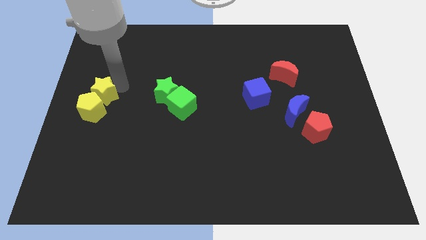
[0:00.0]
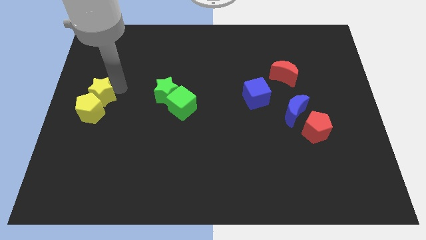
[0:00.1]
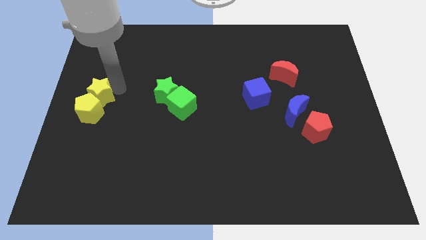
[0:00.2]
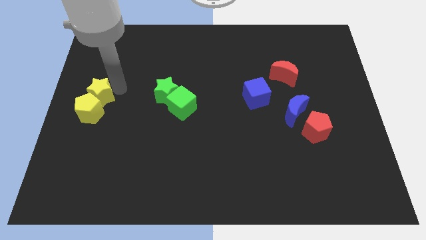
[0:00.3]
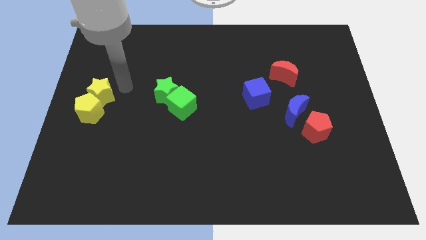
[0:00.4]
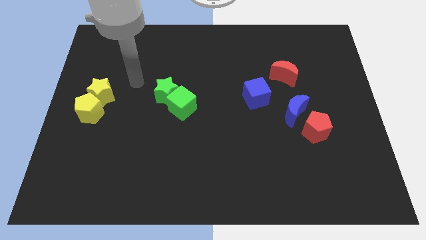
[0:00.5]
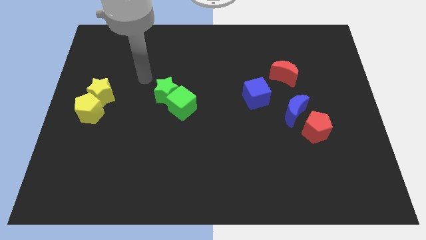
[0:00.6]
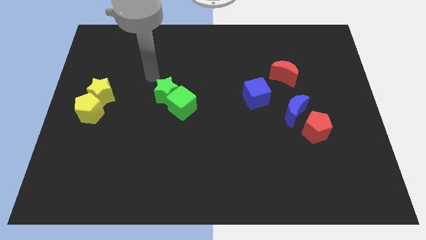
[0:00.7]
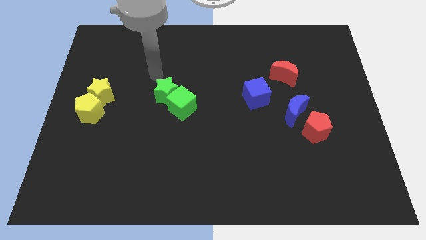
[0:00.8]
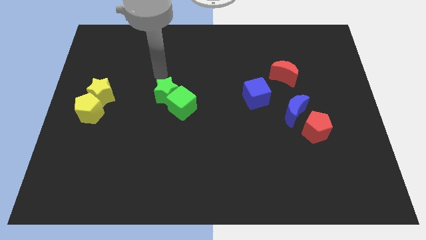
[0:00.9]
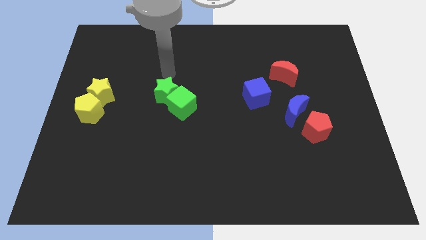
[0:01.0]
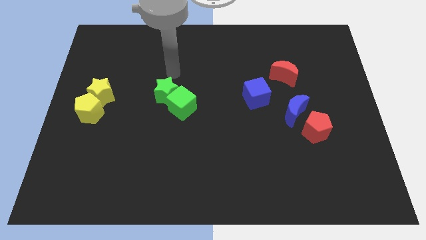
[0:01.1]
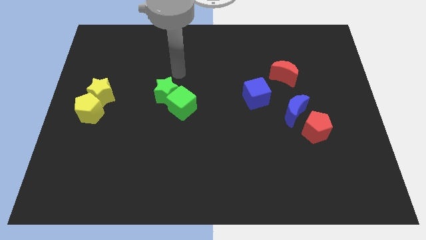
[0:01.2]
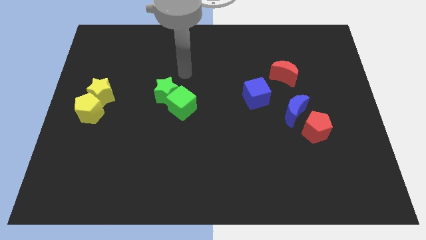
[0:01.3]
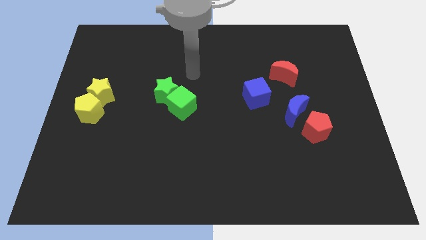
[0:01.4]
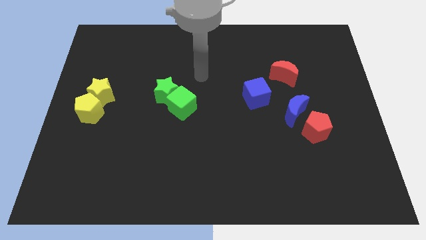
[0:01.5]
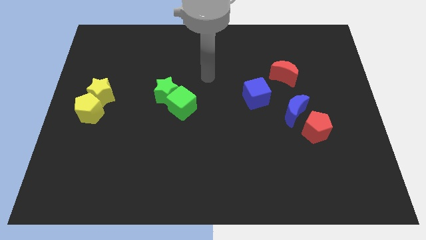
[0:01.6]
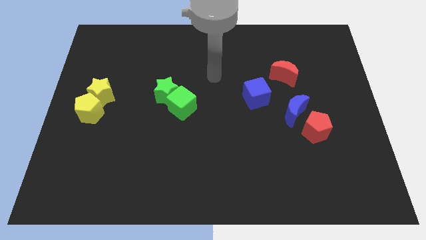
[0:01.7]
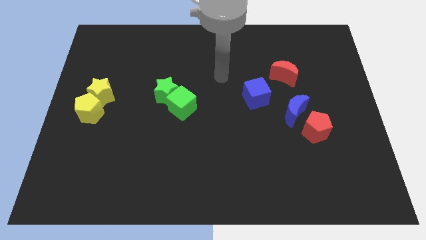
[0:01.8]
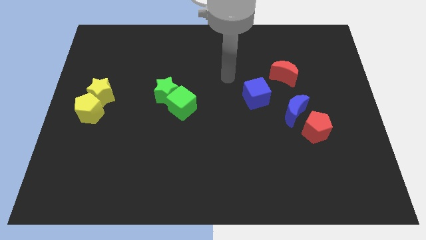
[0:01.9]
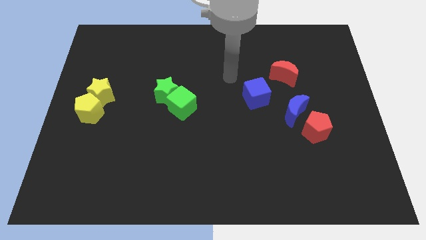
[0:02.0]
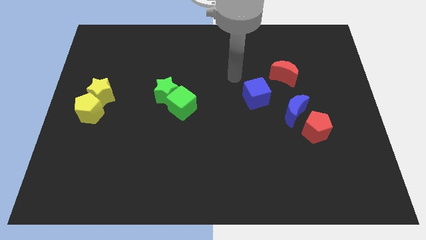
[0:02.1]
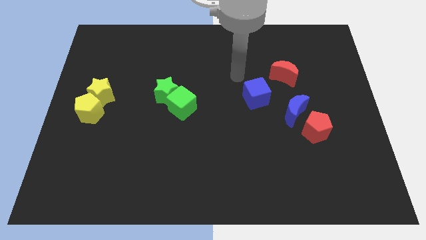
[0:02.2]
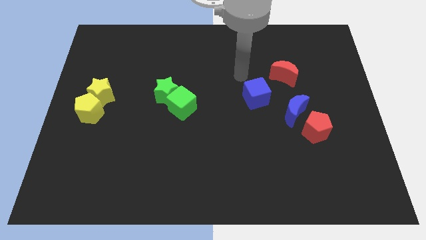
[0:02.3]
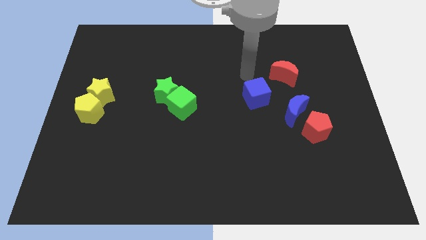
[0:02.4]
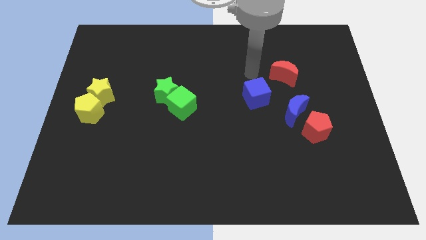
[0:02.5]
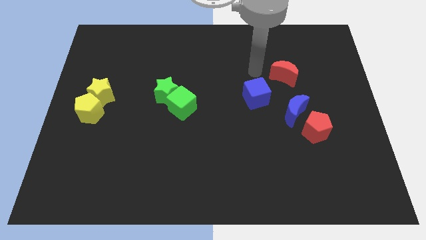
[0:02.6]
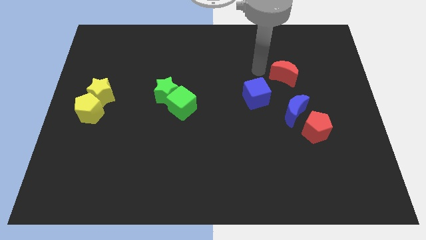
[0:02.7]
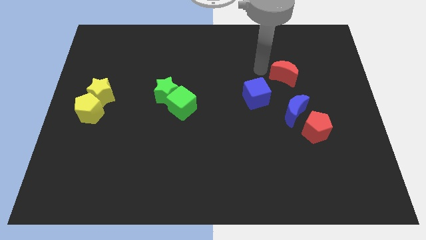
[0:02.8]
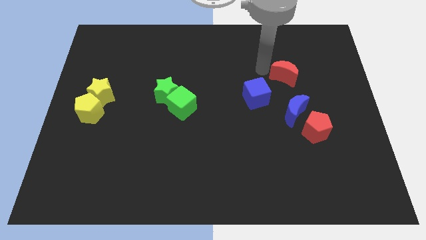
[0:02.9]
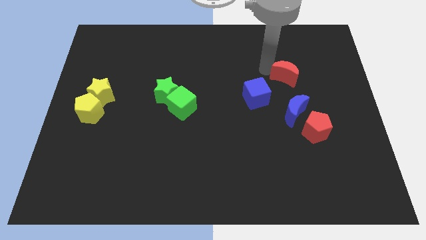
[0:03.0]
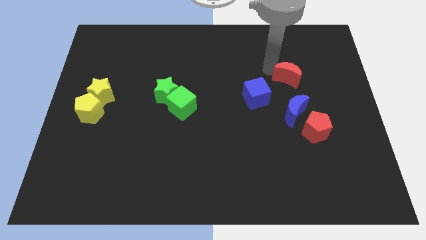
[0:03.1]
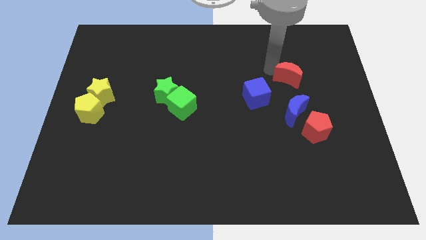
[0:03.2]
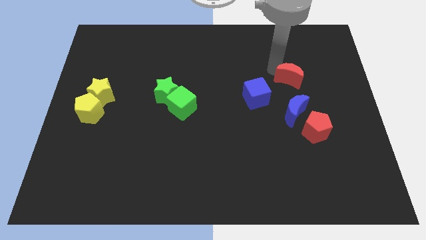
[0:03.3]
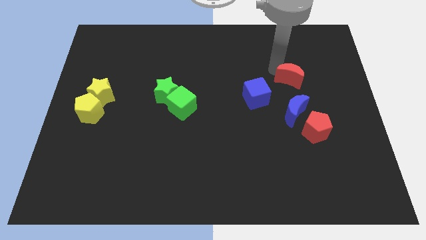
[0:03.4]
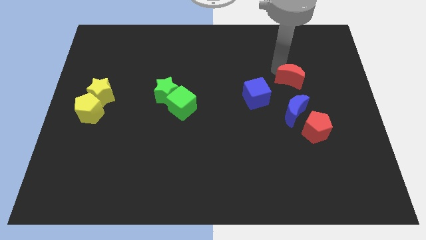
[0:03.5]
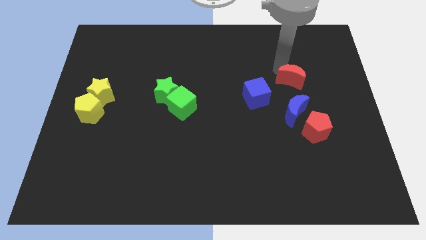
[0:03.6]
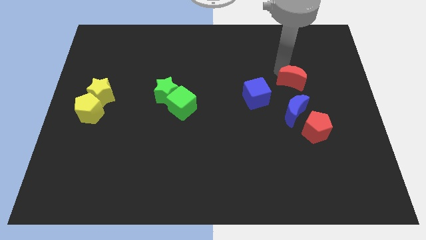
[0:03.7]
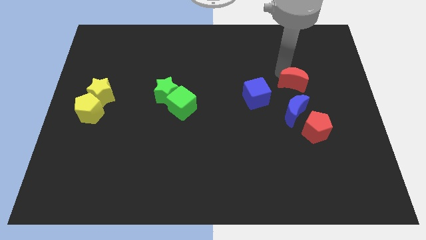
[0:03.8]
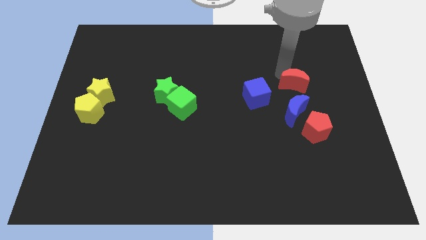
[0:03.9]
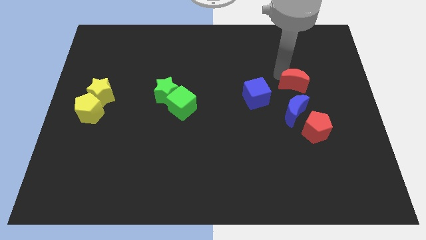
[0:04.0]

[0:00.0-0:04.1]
place the red moon to the right side of blue cube

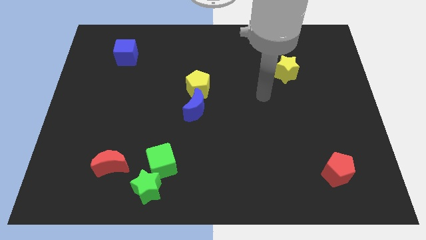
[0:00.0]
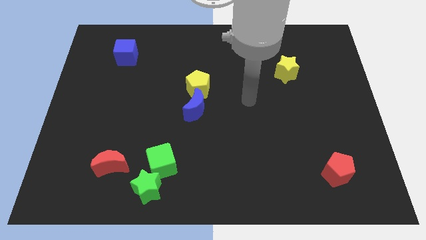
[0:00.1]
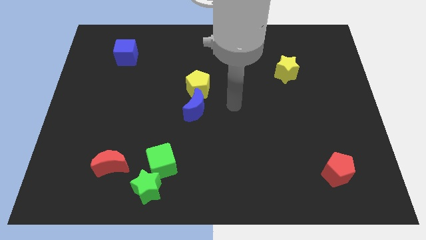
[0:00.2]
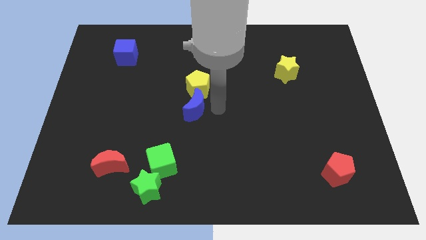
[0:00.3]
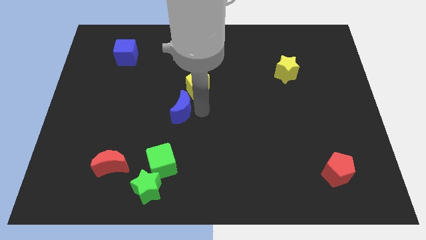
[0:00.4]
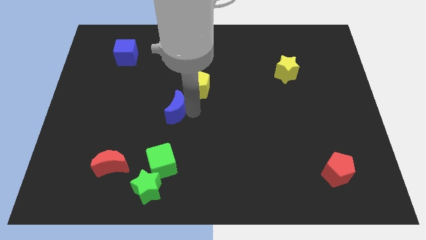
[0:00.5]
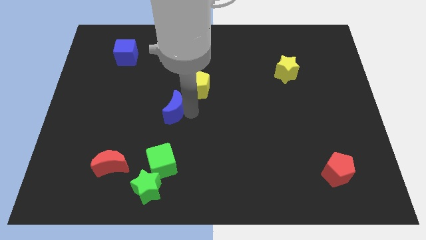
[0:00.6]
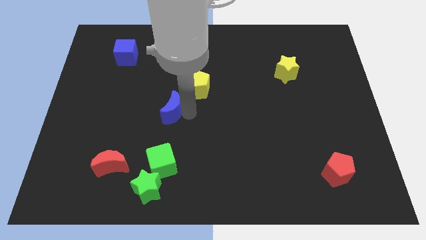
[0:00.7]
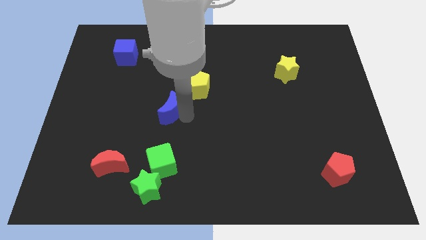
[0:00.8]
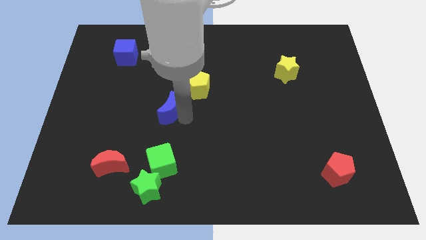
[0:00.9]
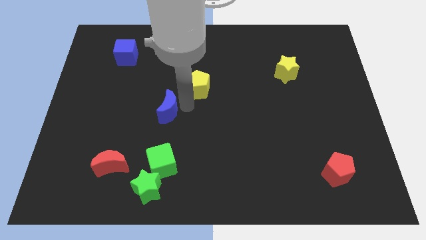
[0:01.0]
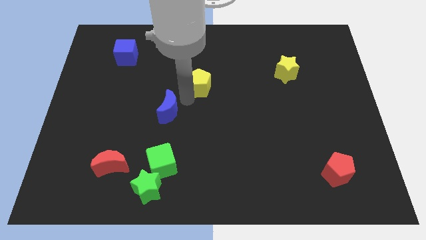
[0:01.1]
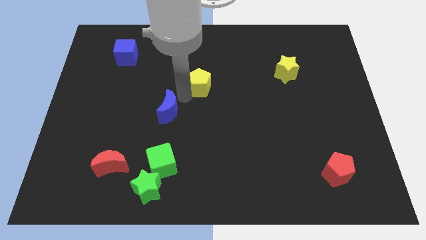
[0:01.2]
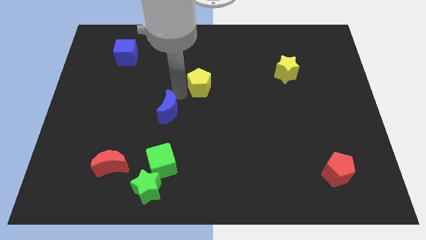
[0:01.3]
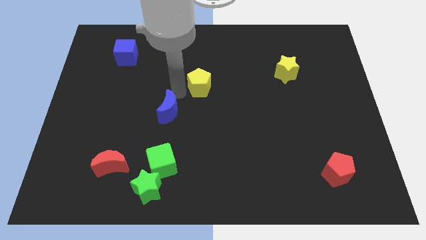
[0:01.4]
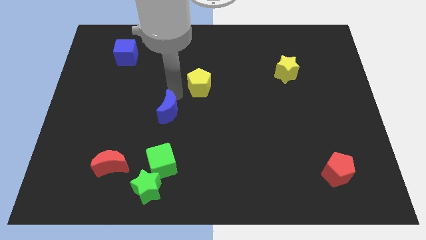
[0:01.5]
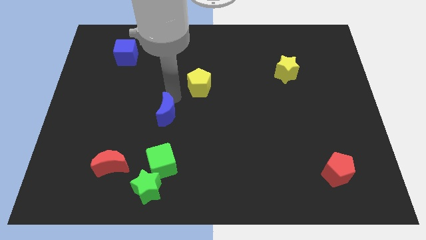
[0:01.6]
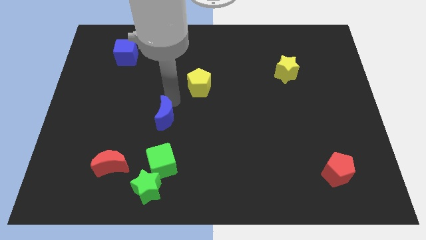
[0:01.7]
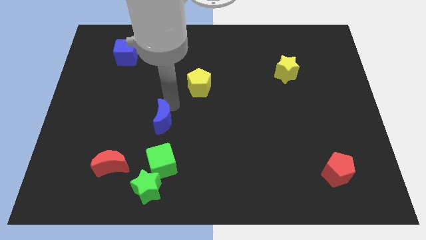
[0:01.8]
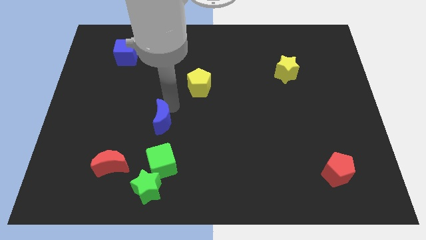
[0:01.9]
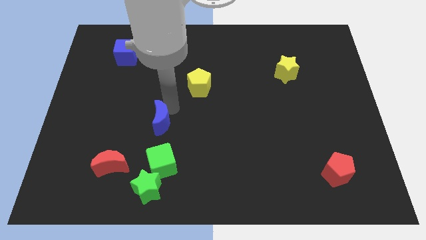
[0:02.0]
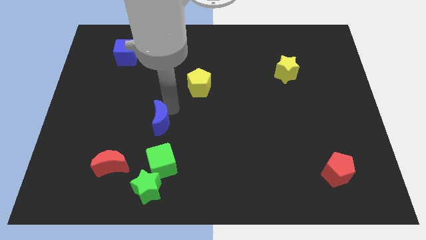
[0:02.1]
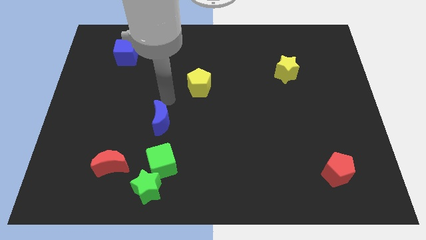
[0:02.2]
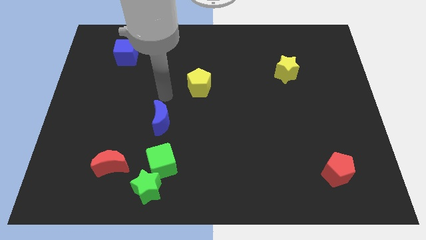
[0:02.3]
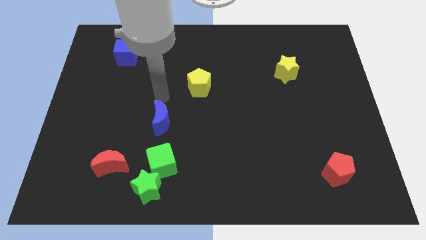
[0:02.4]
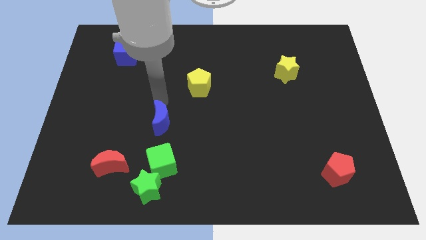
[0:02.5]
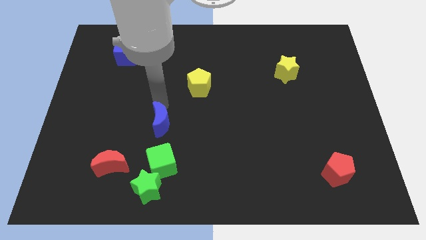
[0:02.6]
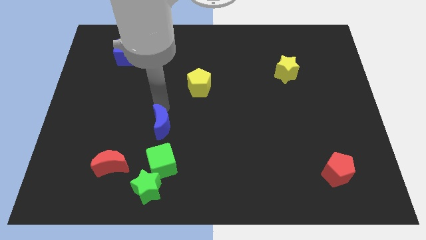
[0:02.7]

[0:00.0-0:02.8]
move the blue crescent away from the yellow pentagon

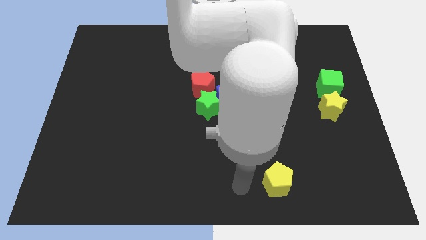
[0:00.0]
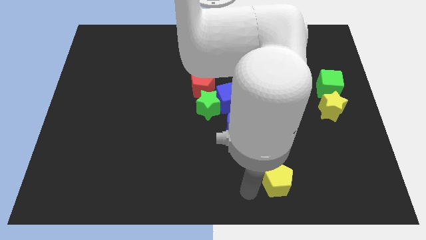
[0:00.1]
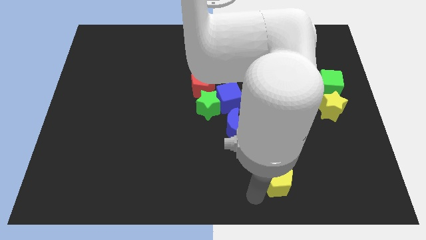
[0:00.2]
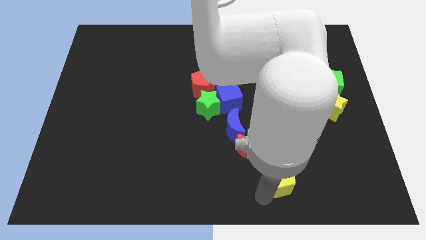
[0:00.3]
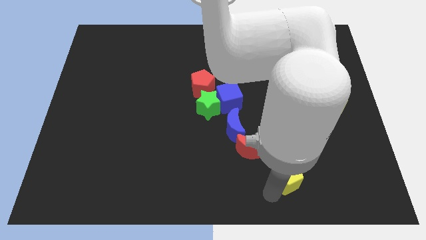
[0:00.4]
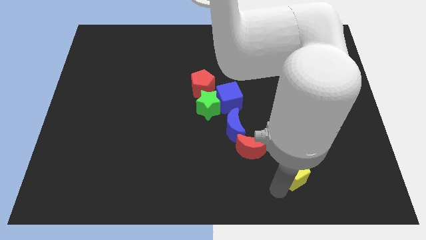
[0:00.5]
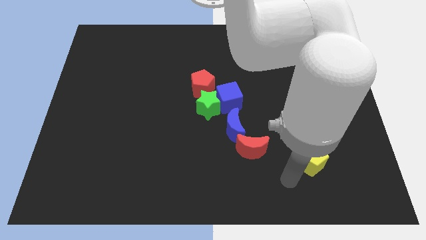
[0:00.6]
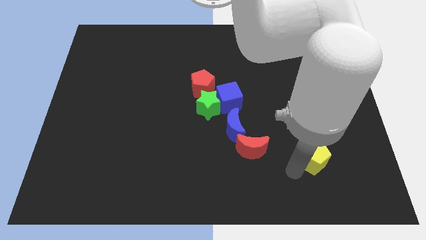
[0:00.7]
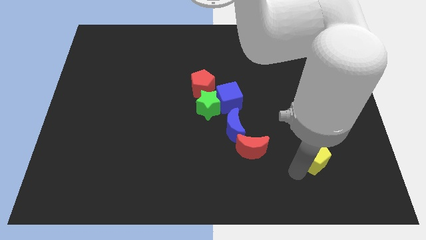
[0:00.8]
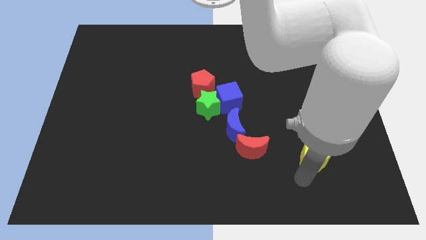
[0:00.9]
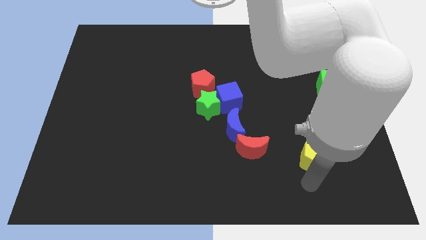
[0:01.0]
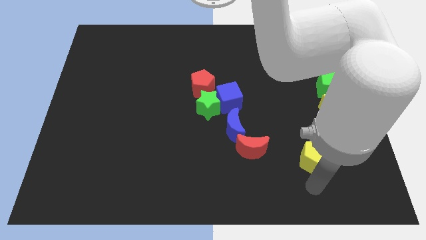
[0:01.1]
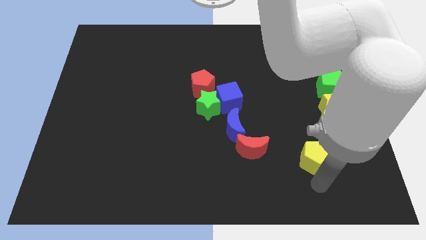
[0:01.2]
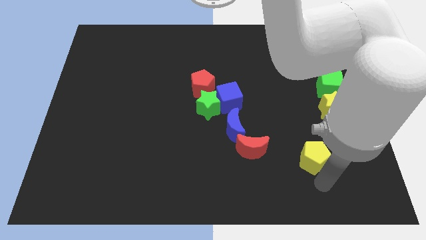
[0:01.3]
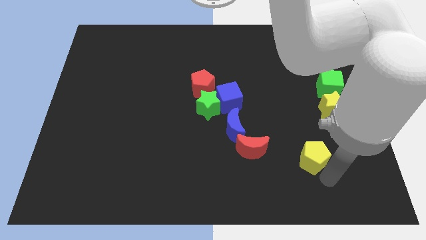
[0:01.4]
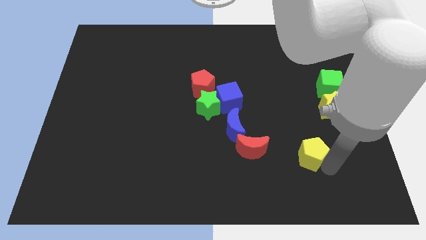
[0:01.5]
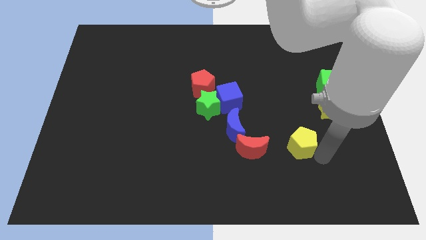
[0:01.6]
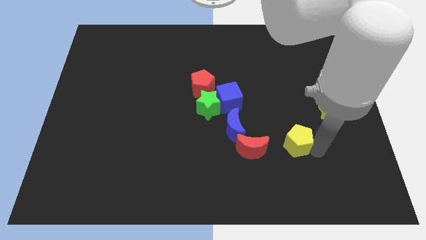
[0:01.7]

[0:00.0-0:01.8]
push the yellow pentagon to the right of the red crescent

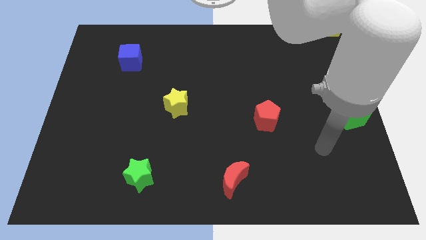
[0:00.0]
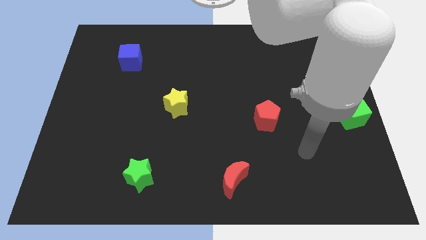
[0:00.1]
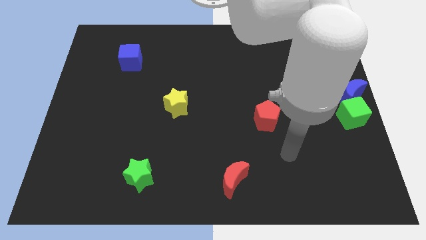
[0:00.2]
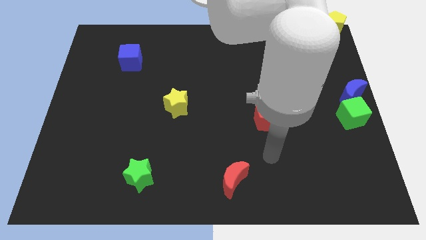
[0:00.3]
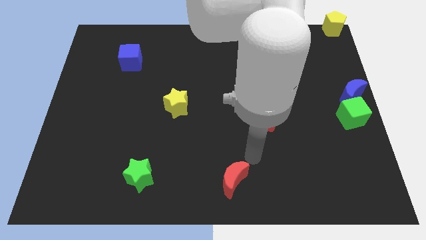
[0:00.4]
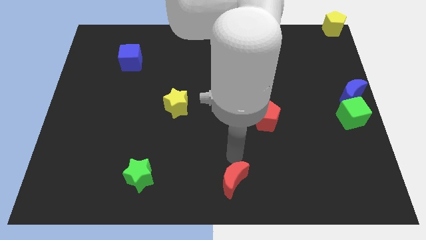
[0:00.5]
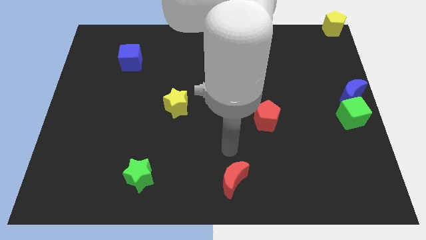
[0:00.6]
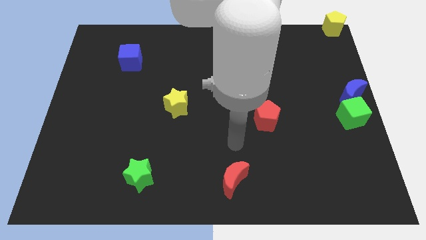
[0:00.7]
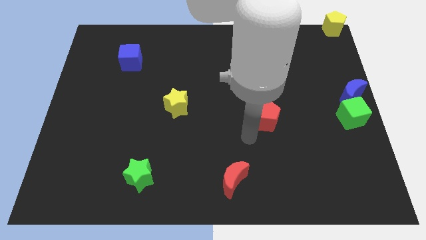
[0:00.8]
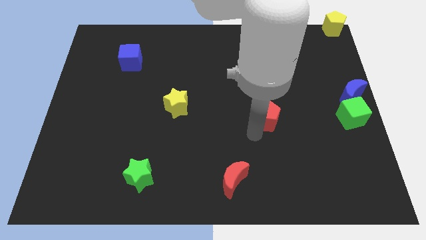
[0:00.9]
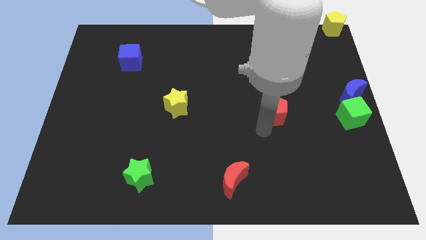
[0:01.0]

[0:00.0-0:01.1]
tap the red pentagon
